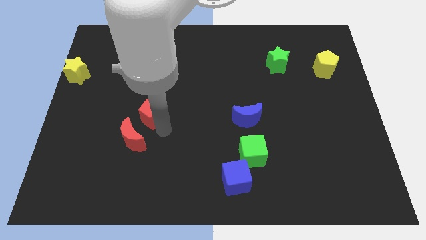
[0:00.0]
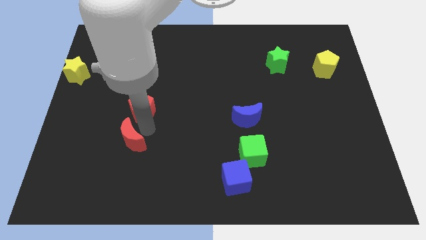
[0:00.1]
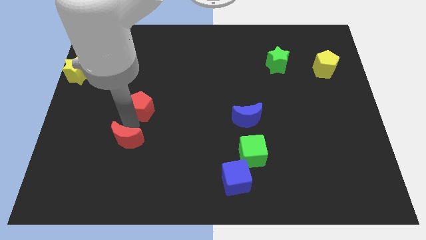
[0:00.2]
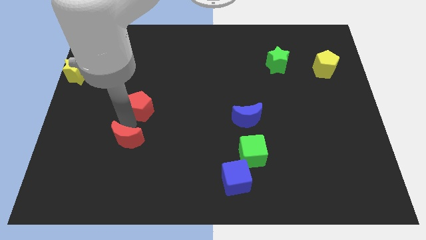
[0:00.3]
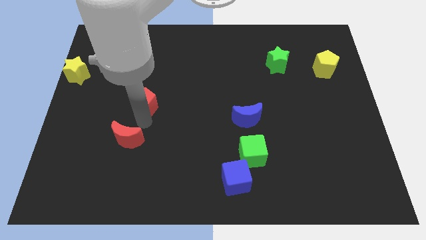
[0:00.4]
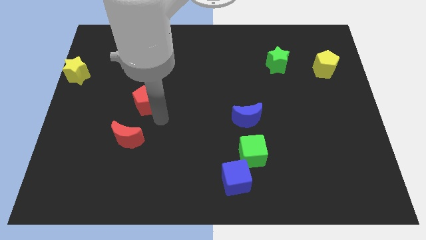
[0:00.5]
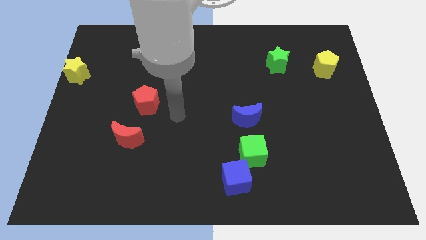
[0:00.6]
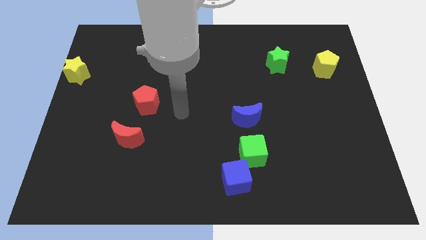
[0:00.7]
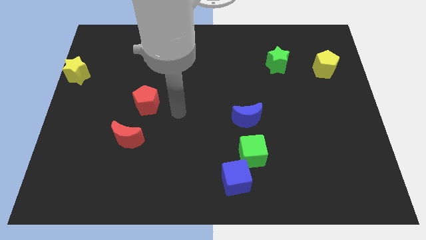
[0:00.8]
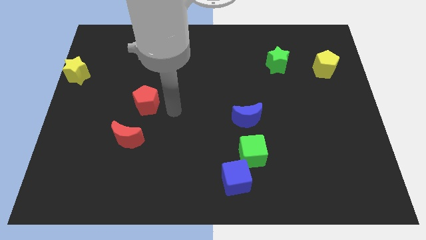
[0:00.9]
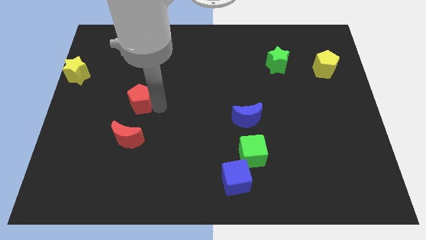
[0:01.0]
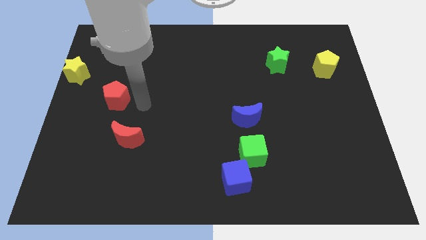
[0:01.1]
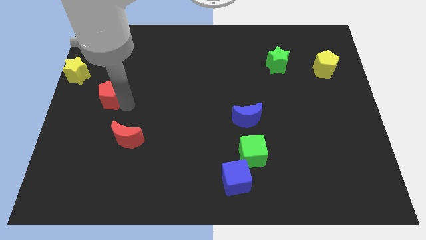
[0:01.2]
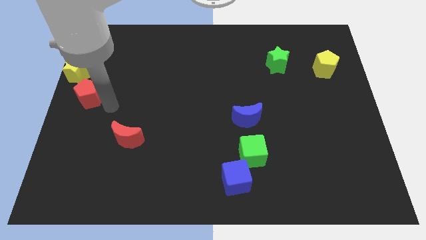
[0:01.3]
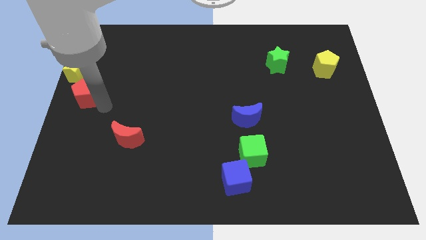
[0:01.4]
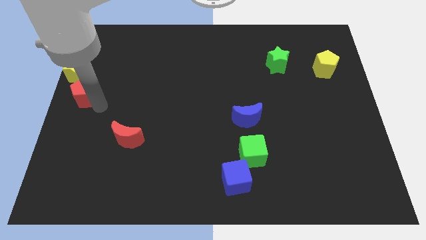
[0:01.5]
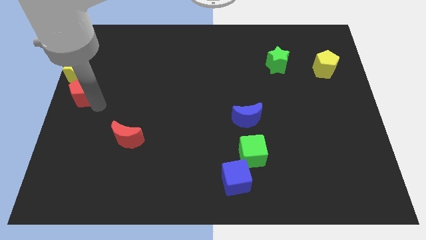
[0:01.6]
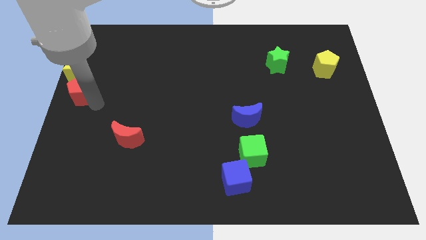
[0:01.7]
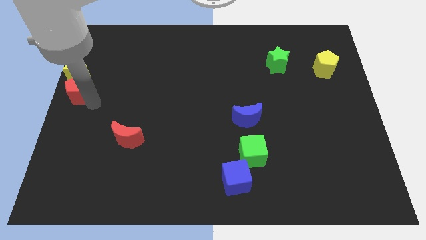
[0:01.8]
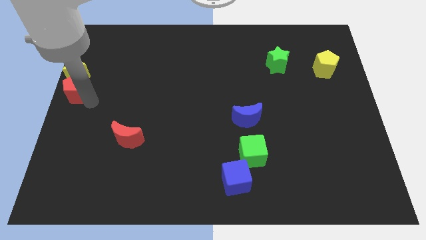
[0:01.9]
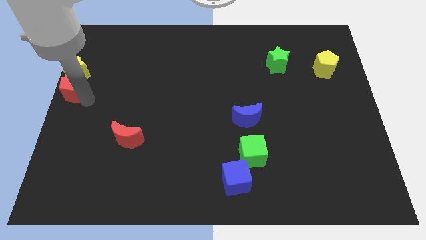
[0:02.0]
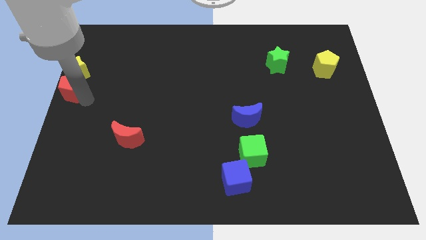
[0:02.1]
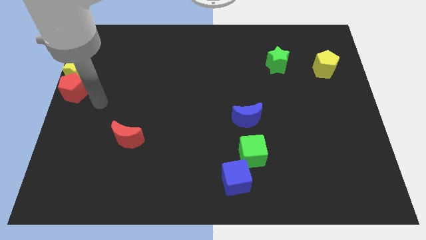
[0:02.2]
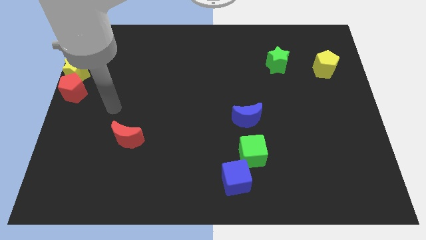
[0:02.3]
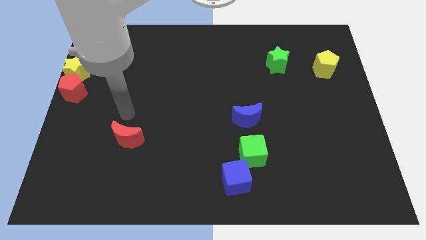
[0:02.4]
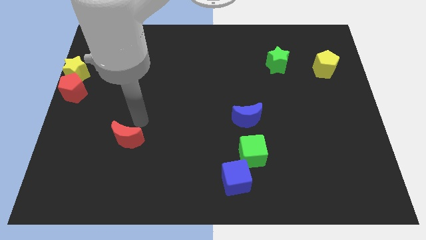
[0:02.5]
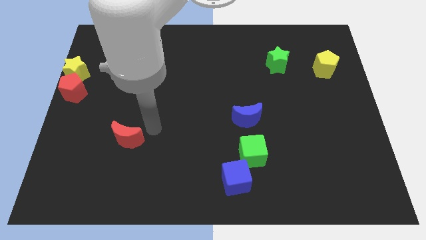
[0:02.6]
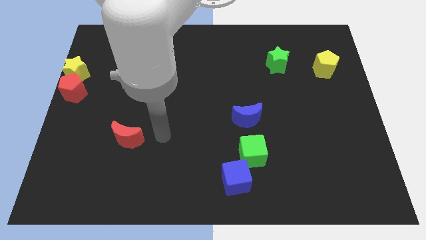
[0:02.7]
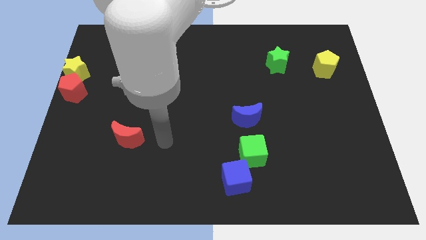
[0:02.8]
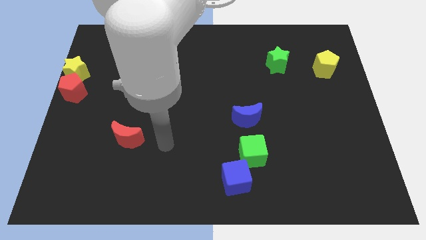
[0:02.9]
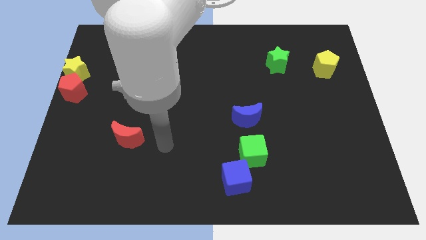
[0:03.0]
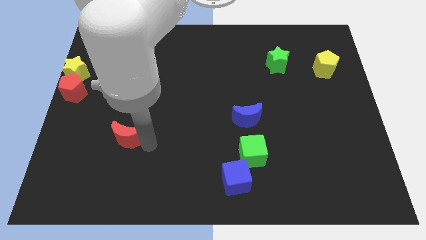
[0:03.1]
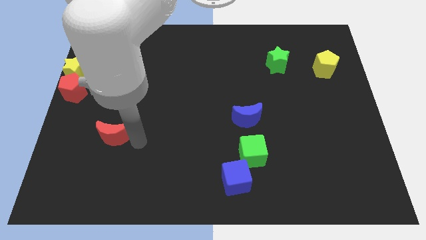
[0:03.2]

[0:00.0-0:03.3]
place the red pentagon under the yellow star

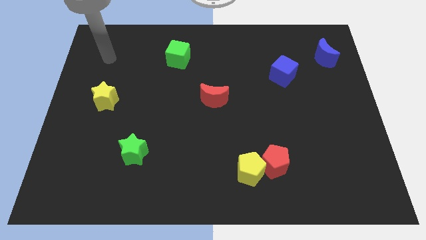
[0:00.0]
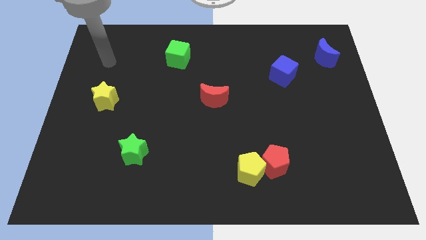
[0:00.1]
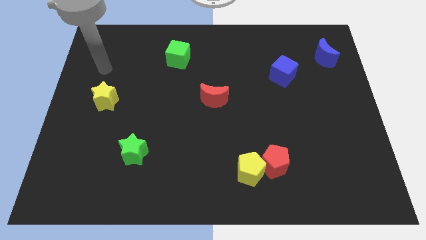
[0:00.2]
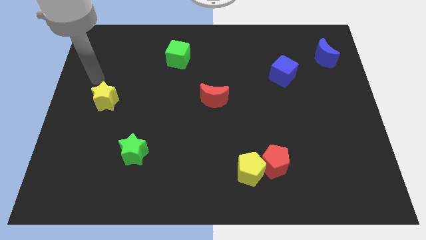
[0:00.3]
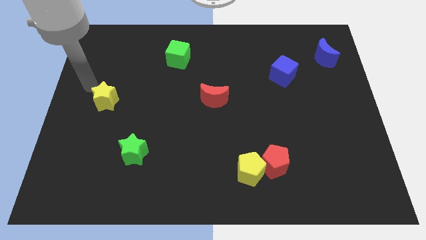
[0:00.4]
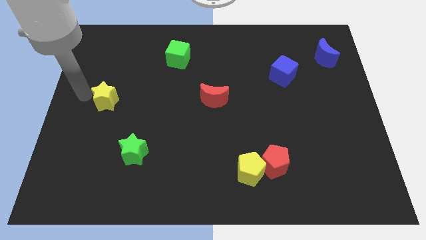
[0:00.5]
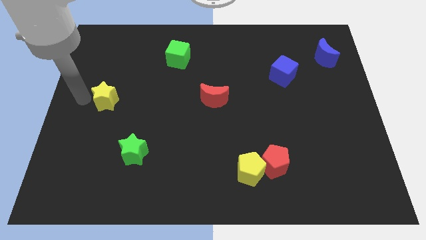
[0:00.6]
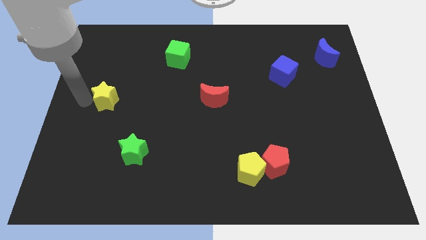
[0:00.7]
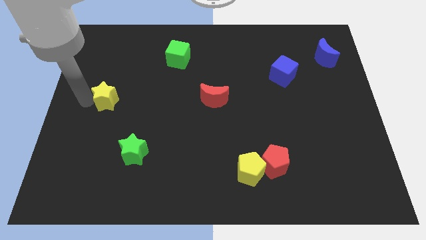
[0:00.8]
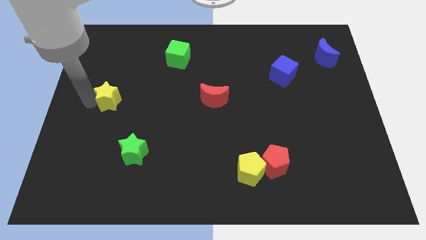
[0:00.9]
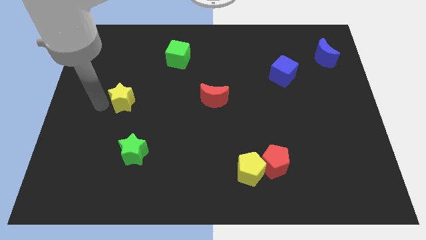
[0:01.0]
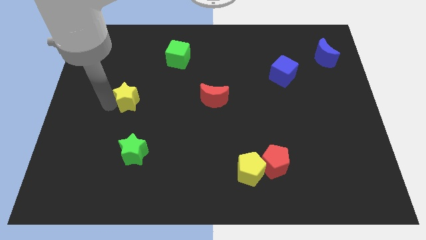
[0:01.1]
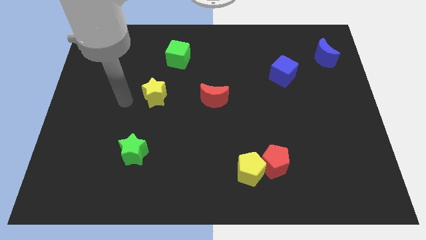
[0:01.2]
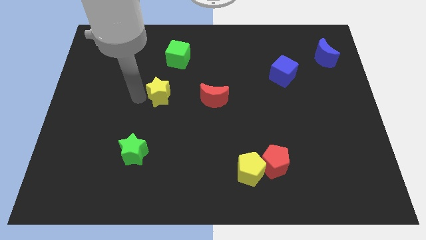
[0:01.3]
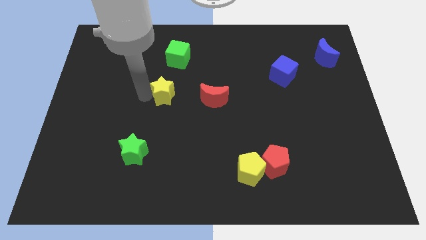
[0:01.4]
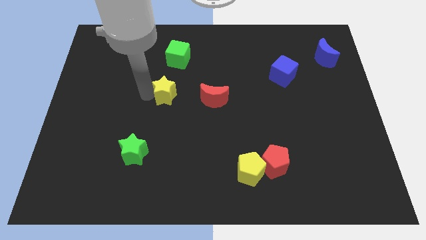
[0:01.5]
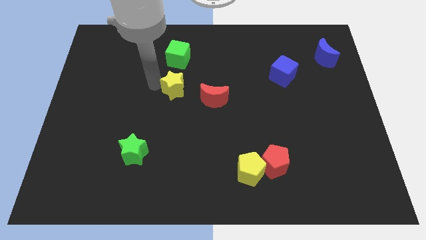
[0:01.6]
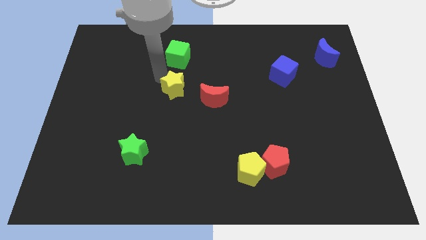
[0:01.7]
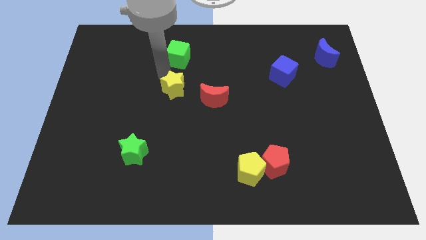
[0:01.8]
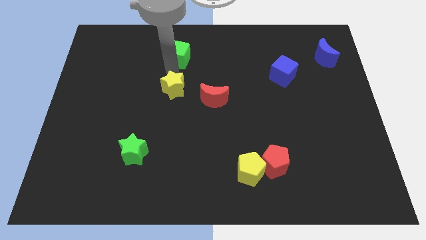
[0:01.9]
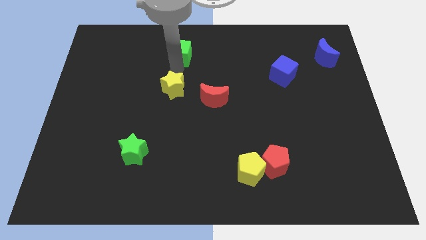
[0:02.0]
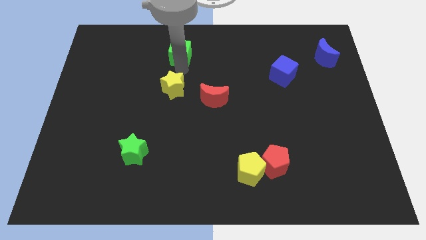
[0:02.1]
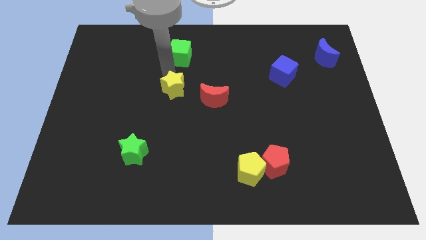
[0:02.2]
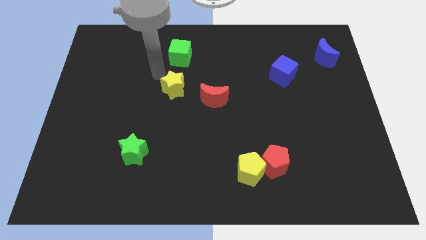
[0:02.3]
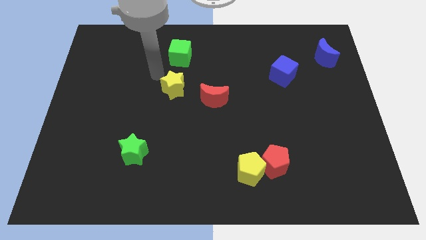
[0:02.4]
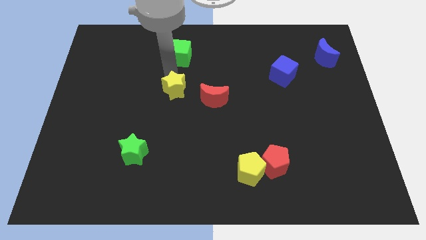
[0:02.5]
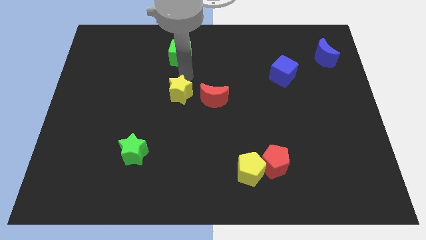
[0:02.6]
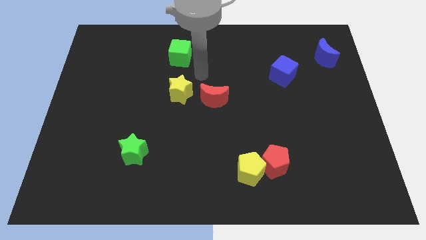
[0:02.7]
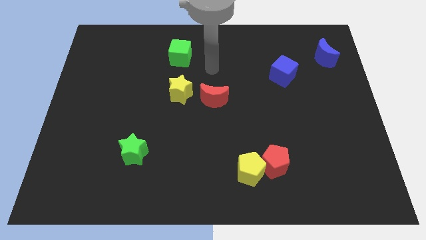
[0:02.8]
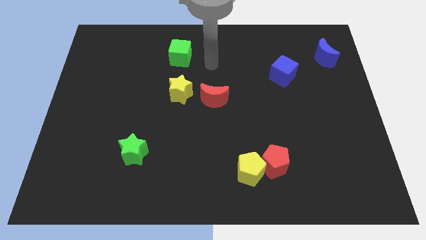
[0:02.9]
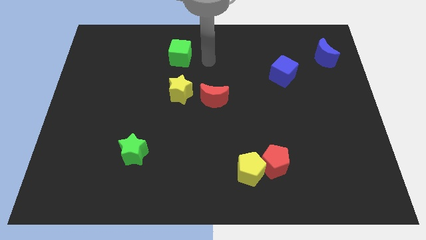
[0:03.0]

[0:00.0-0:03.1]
slide yellow star to the left of red moon

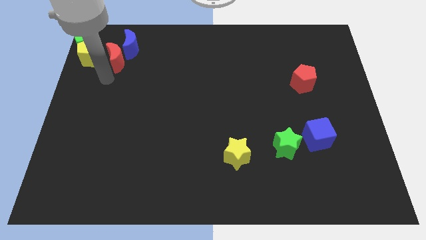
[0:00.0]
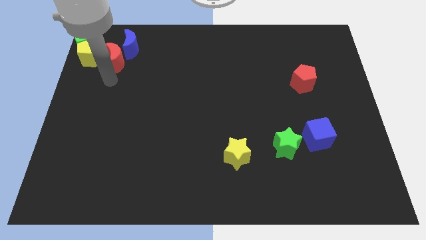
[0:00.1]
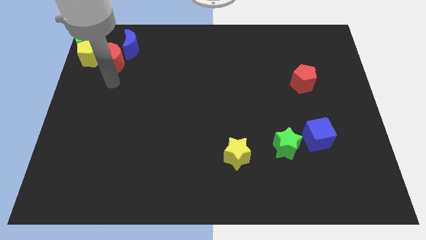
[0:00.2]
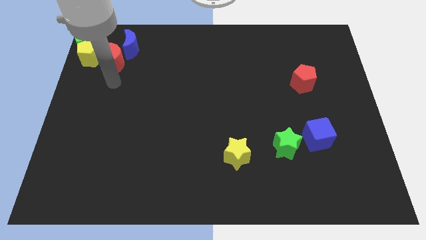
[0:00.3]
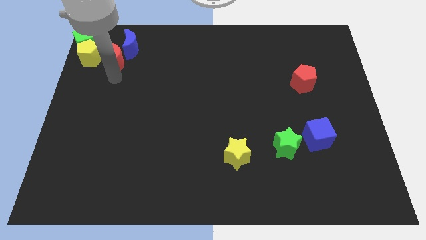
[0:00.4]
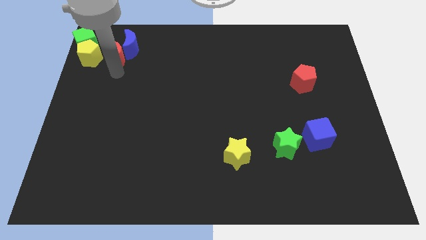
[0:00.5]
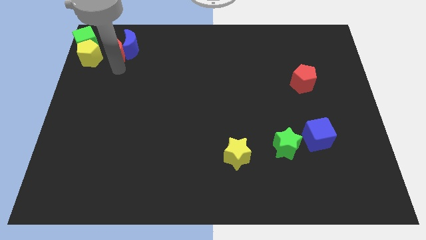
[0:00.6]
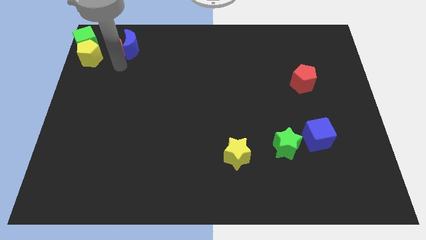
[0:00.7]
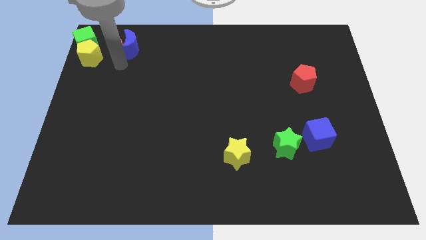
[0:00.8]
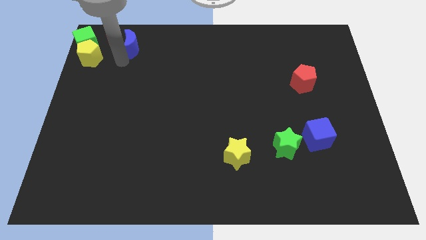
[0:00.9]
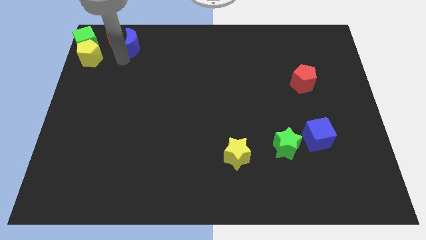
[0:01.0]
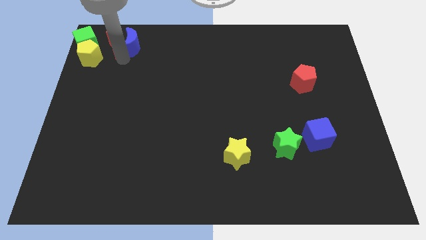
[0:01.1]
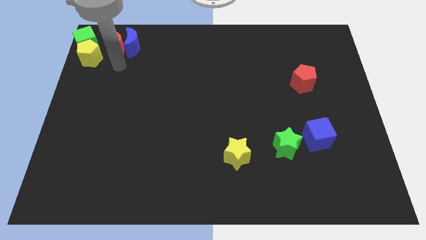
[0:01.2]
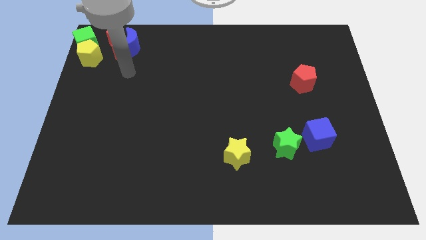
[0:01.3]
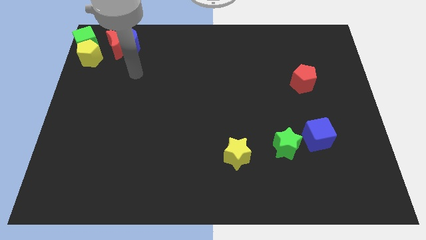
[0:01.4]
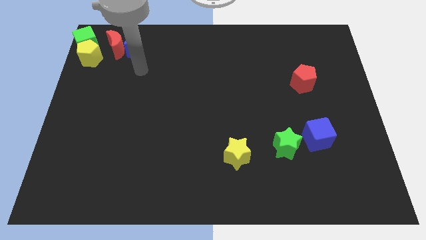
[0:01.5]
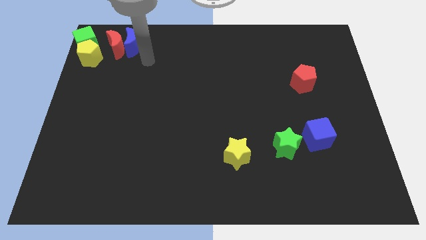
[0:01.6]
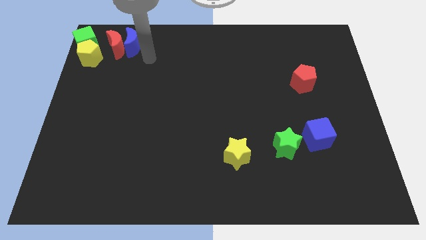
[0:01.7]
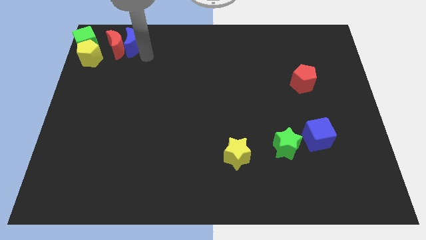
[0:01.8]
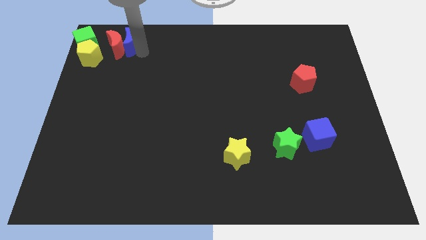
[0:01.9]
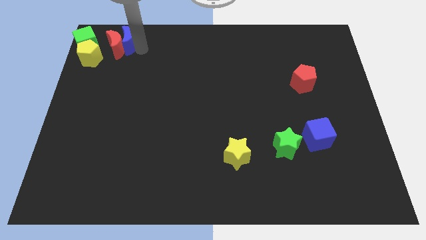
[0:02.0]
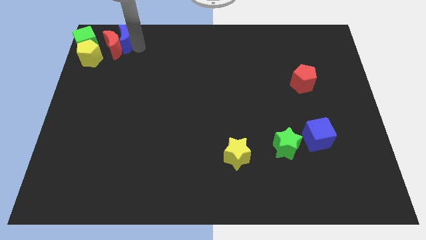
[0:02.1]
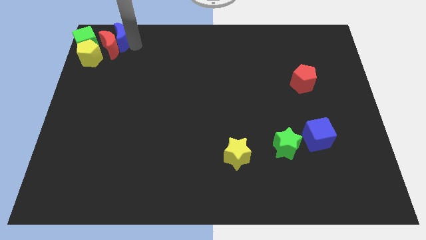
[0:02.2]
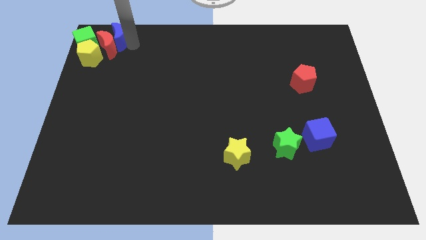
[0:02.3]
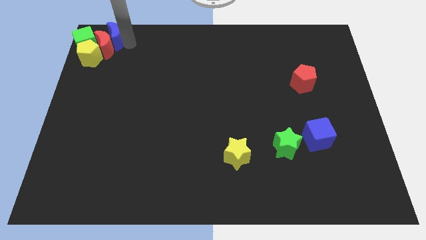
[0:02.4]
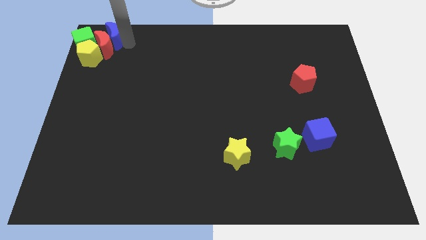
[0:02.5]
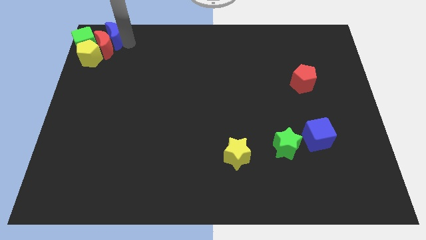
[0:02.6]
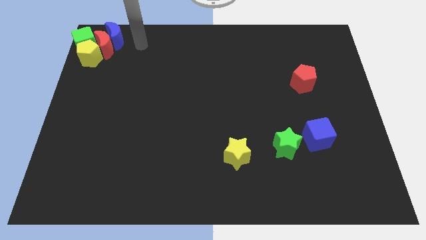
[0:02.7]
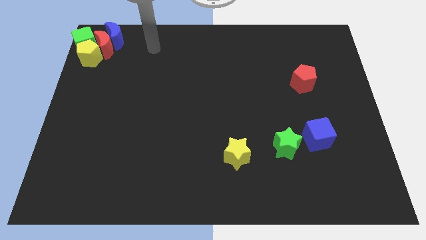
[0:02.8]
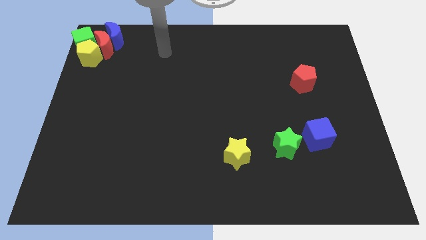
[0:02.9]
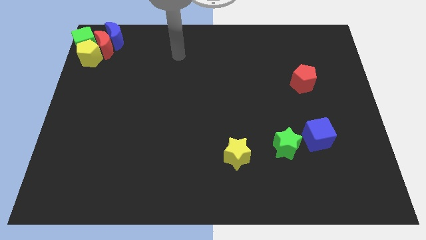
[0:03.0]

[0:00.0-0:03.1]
move the red moon and the blue moon towards the top left corner
